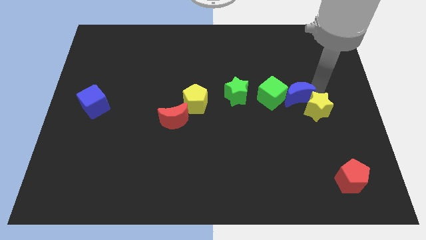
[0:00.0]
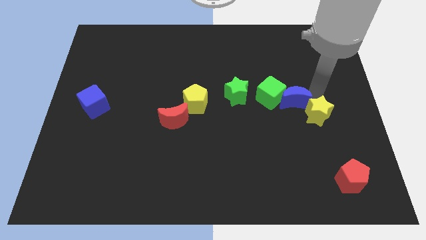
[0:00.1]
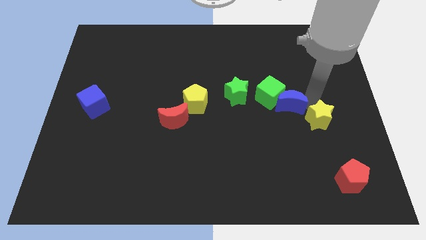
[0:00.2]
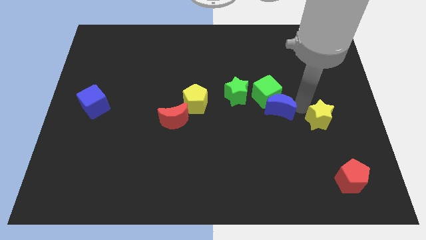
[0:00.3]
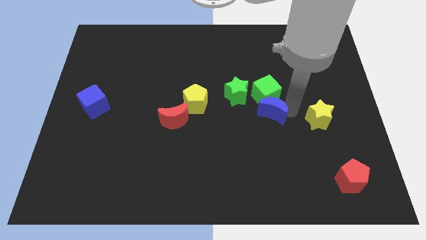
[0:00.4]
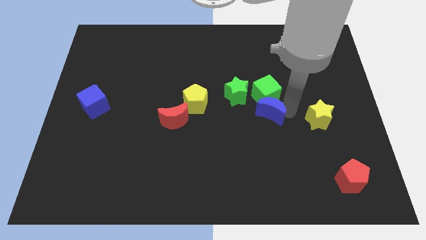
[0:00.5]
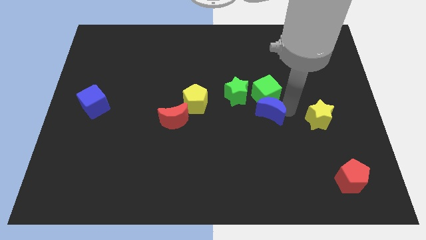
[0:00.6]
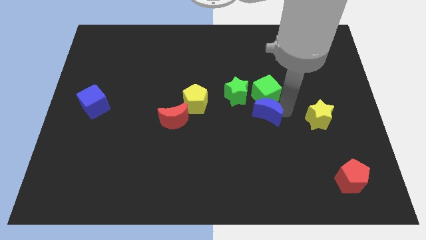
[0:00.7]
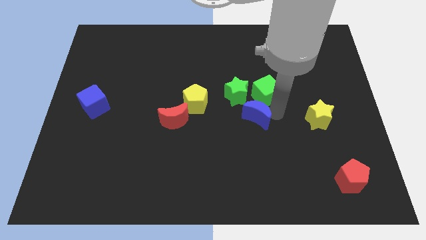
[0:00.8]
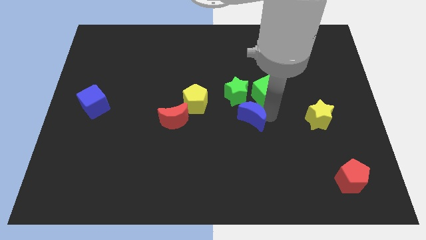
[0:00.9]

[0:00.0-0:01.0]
push blue crescent below green star

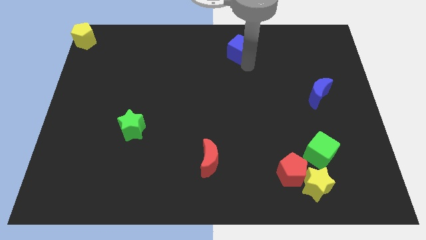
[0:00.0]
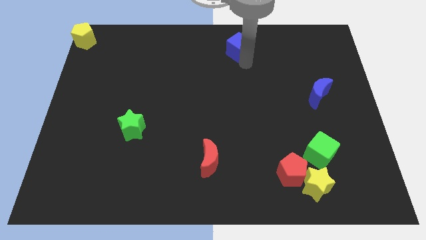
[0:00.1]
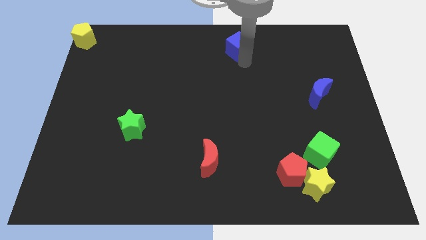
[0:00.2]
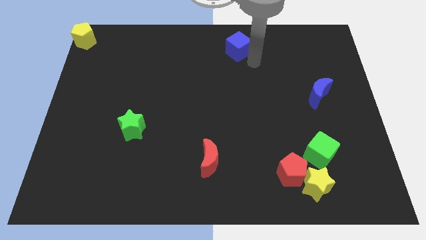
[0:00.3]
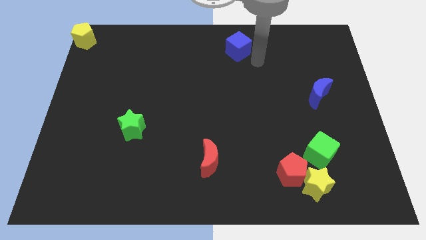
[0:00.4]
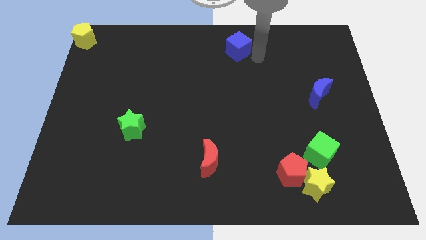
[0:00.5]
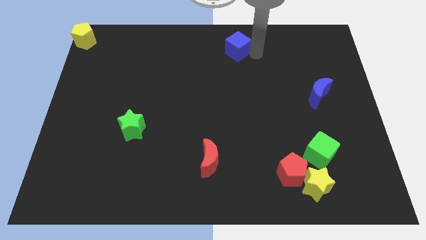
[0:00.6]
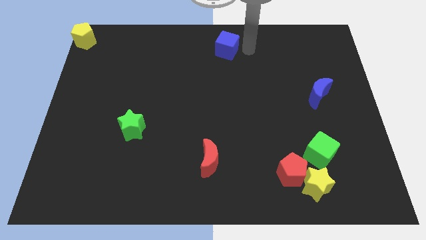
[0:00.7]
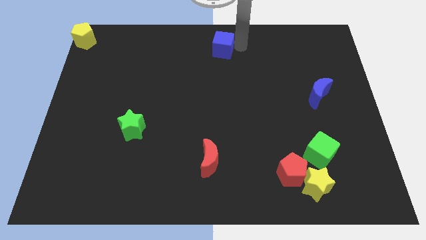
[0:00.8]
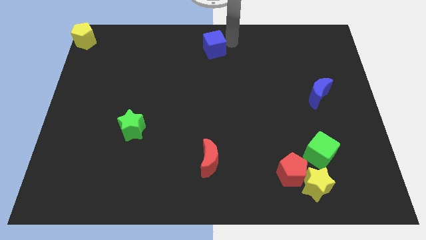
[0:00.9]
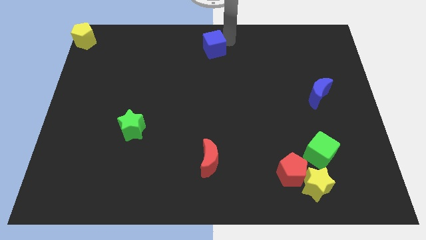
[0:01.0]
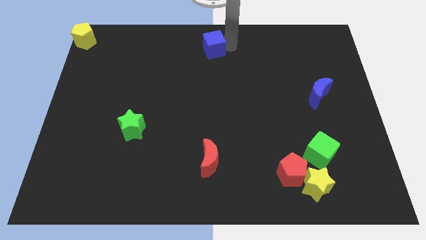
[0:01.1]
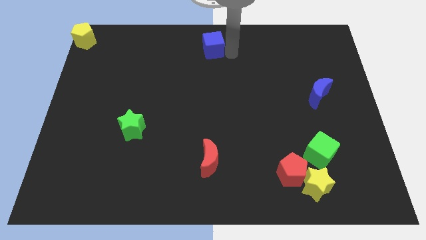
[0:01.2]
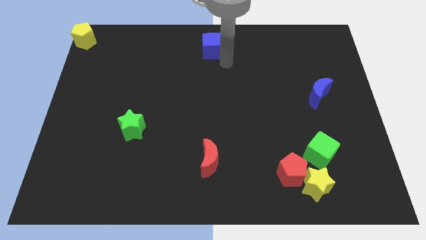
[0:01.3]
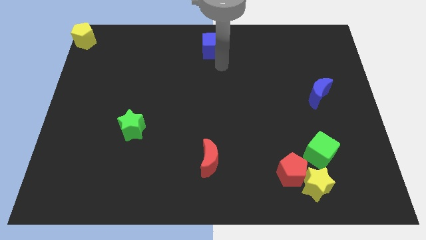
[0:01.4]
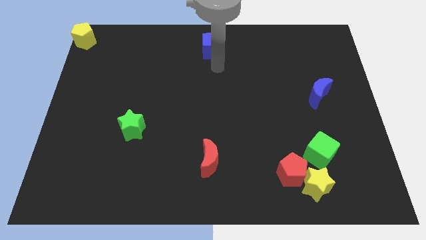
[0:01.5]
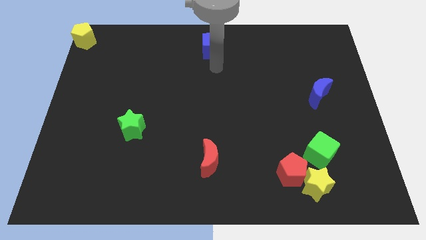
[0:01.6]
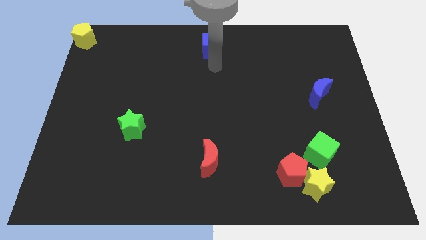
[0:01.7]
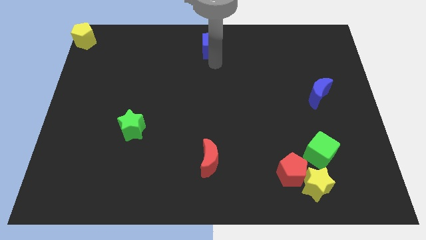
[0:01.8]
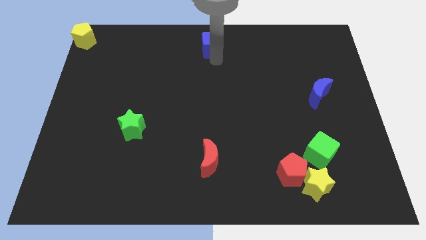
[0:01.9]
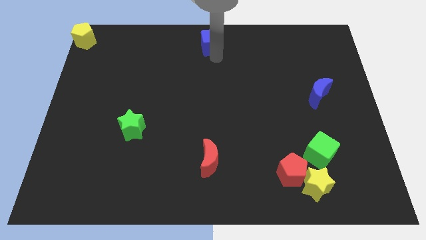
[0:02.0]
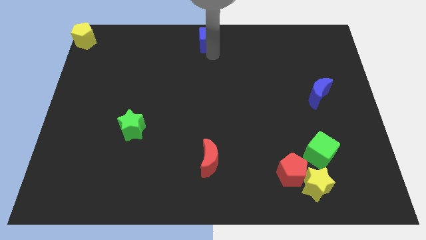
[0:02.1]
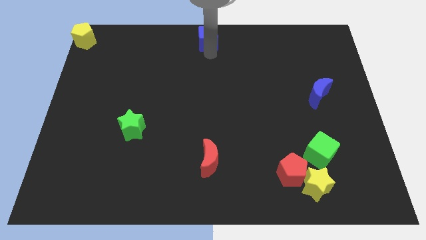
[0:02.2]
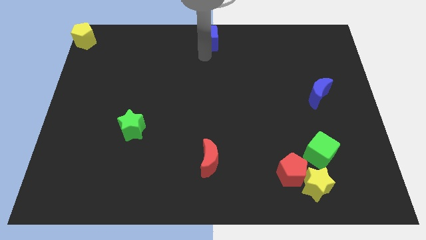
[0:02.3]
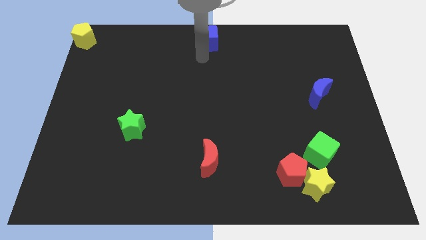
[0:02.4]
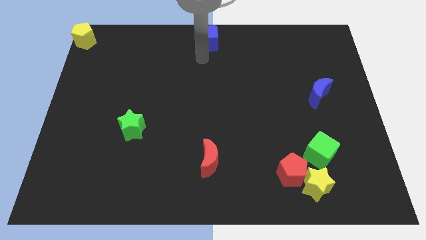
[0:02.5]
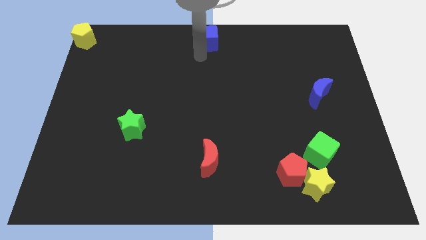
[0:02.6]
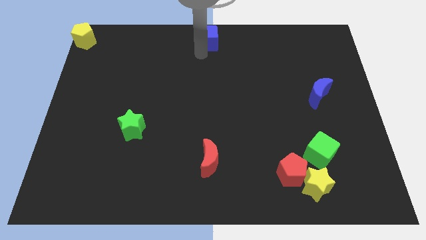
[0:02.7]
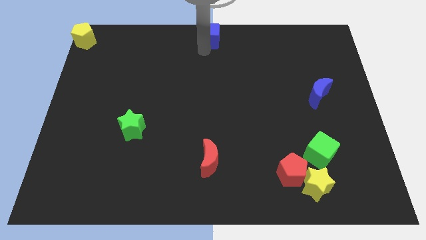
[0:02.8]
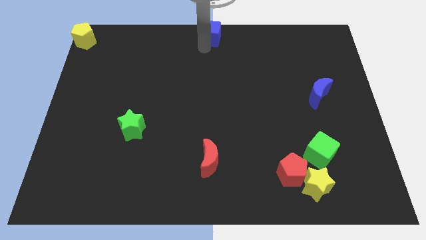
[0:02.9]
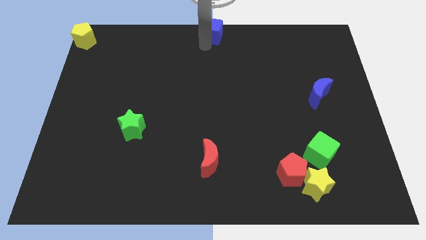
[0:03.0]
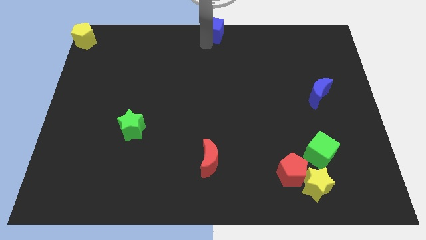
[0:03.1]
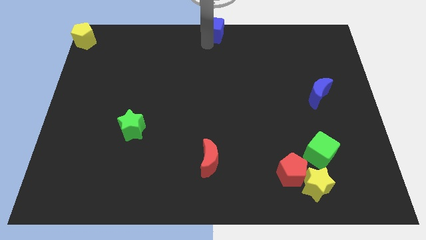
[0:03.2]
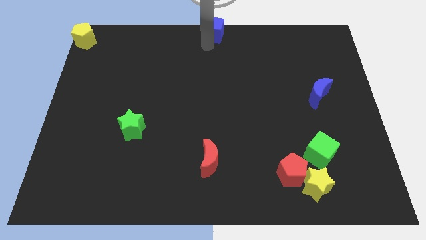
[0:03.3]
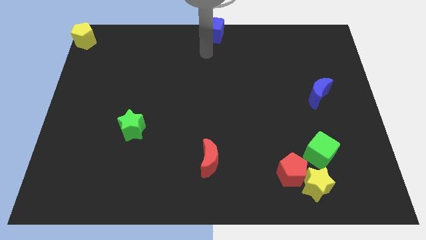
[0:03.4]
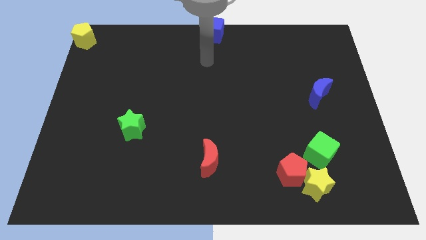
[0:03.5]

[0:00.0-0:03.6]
move the blue cube at the top center of the board

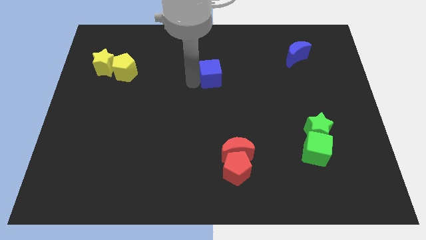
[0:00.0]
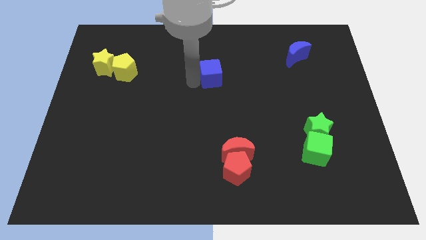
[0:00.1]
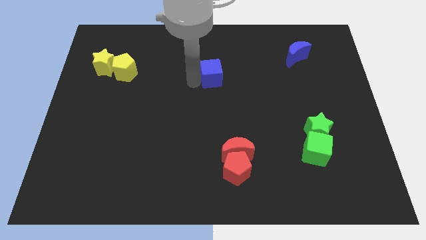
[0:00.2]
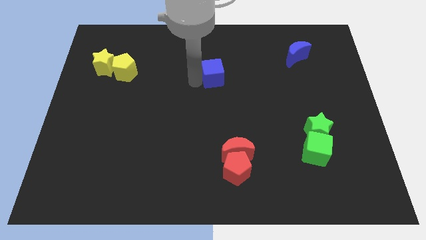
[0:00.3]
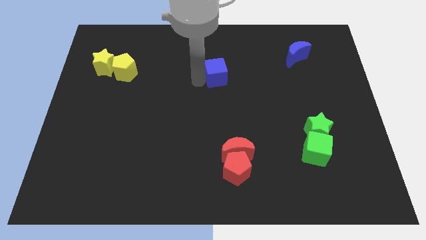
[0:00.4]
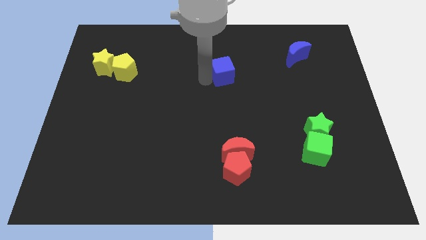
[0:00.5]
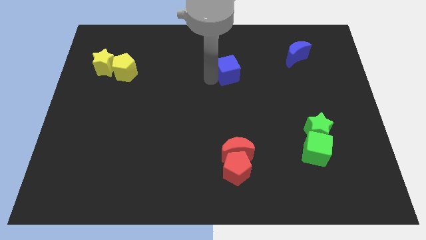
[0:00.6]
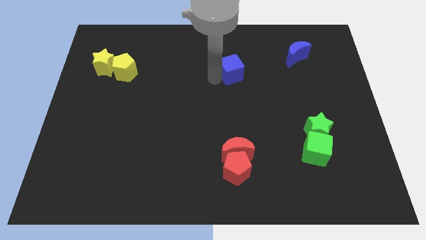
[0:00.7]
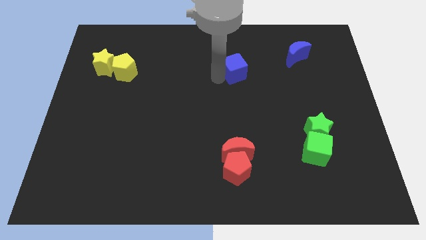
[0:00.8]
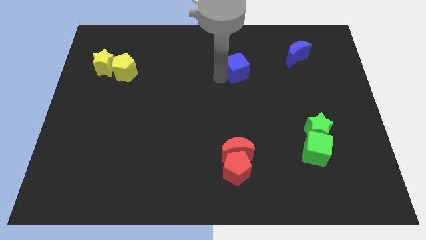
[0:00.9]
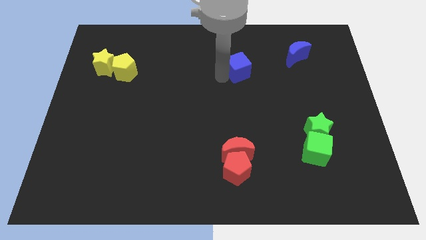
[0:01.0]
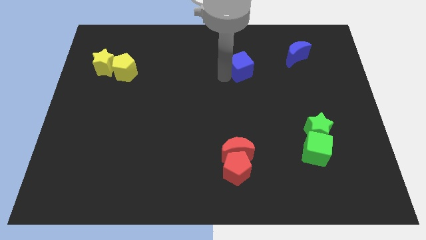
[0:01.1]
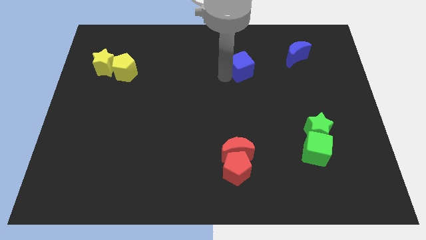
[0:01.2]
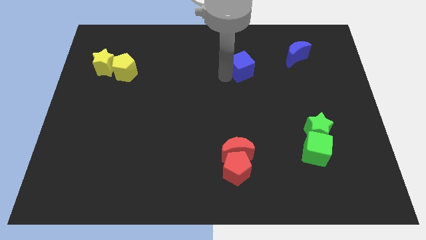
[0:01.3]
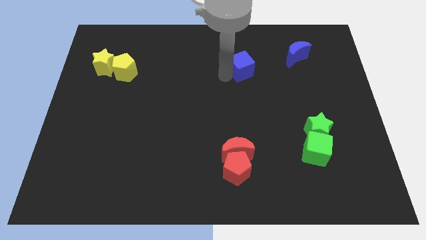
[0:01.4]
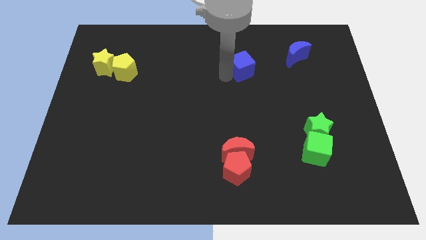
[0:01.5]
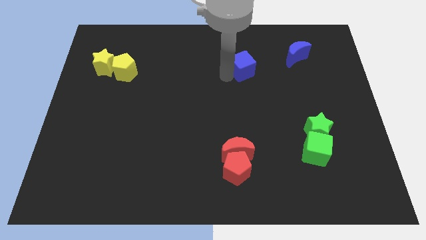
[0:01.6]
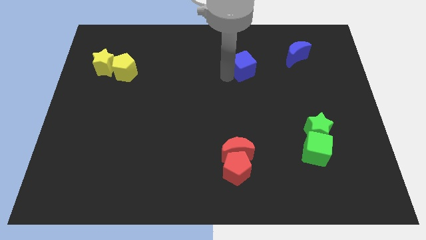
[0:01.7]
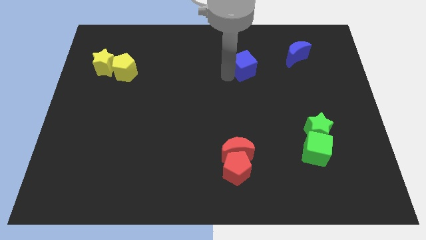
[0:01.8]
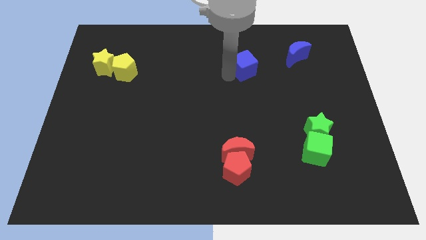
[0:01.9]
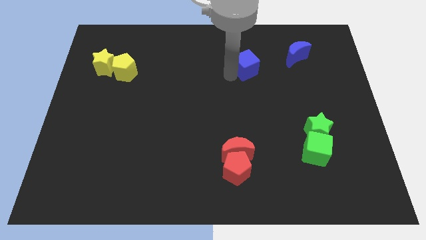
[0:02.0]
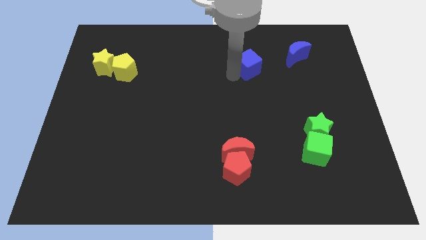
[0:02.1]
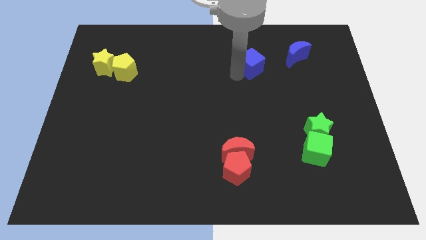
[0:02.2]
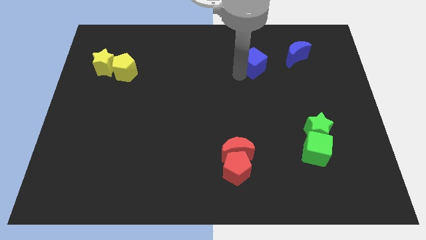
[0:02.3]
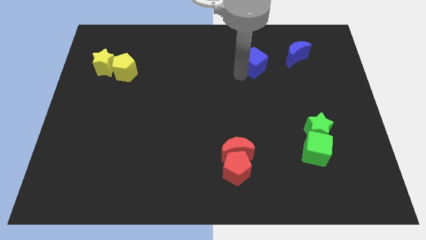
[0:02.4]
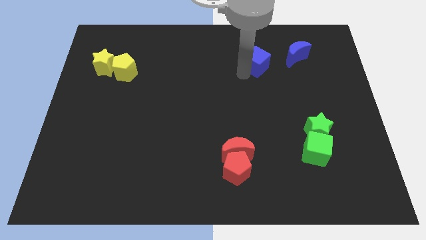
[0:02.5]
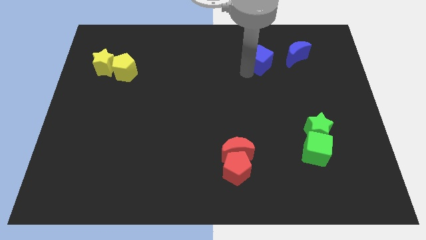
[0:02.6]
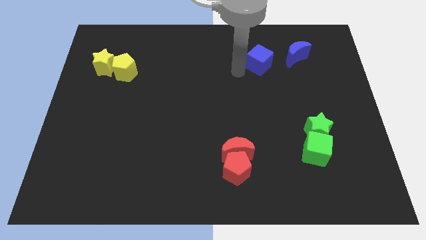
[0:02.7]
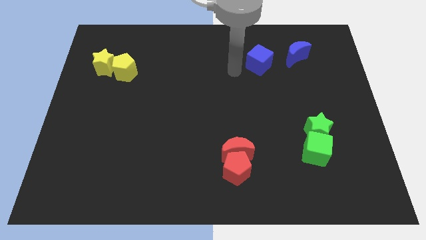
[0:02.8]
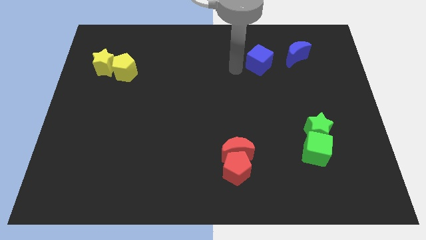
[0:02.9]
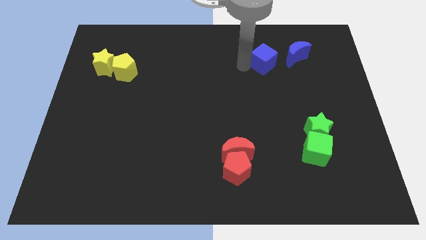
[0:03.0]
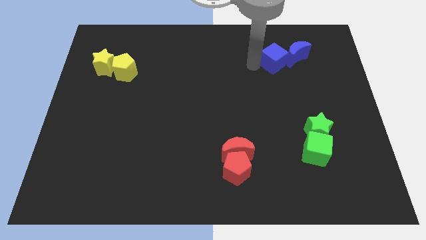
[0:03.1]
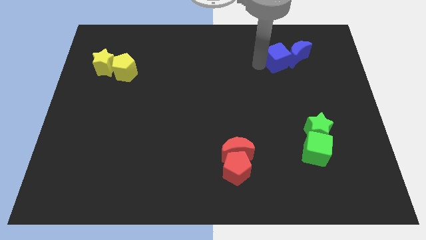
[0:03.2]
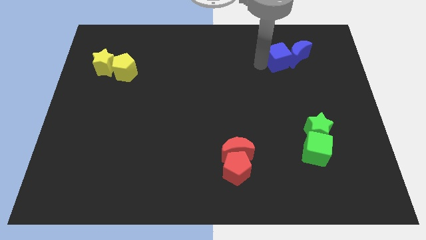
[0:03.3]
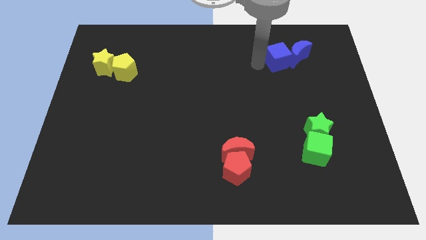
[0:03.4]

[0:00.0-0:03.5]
move the blue cube to the left side of the blue moon

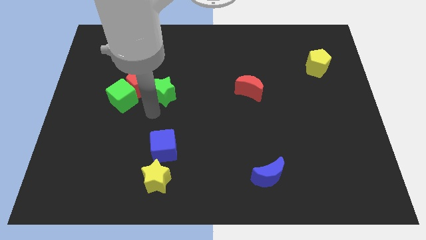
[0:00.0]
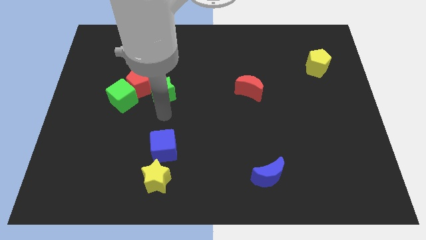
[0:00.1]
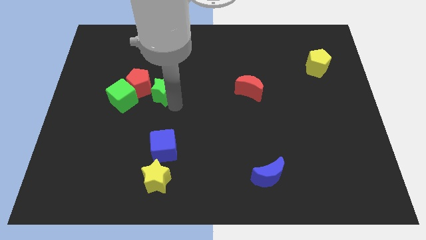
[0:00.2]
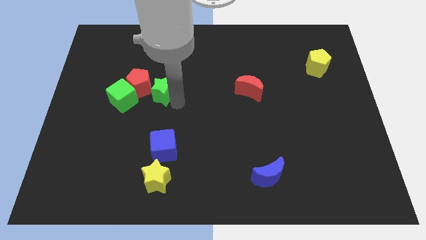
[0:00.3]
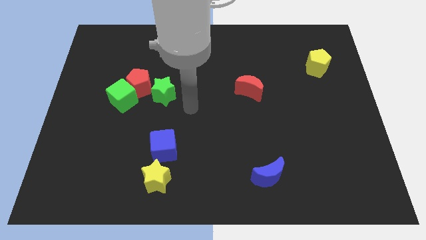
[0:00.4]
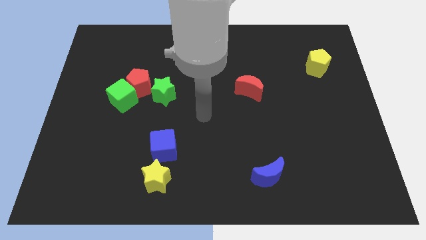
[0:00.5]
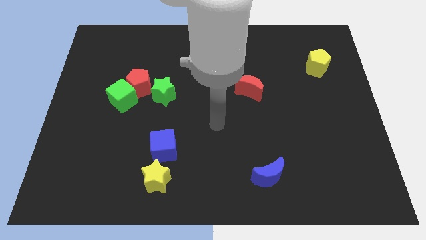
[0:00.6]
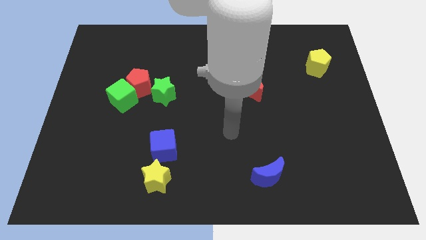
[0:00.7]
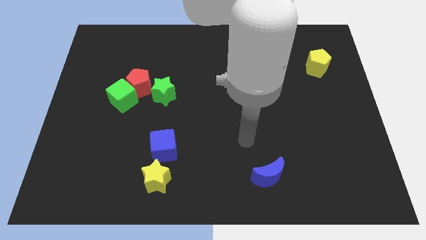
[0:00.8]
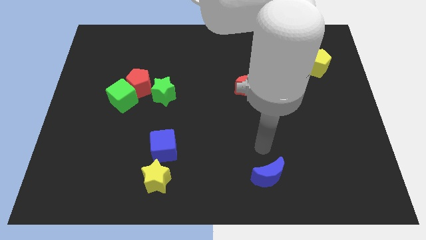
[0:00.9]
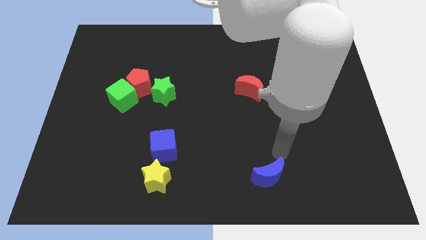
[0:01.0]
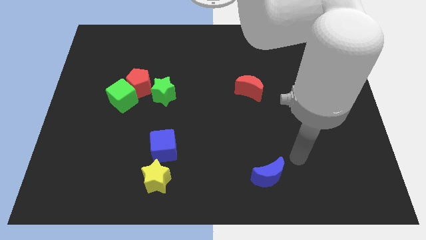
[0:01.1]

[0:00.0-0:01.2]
point your arm at the top right of the blue crescent
